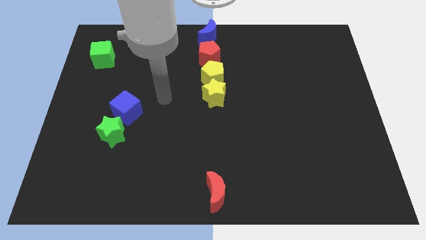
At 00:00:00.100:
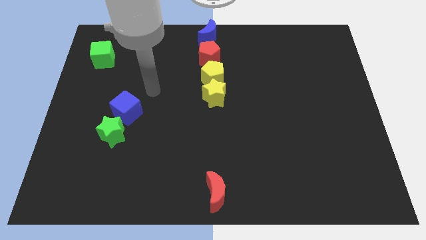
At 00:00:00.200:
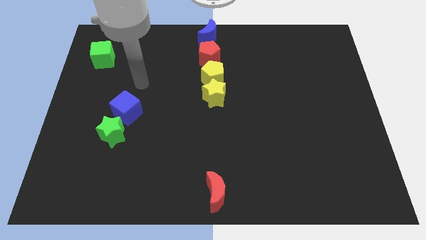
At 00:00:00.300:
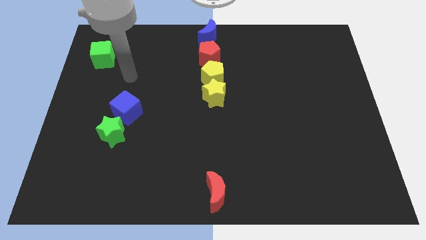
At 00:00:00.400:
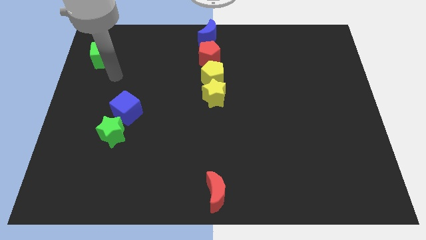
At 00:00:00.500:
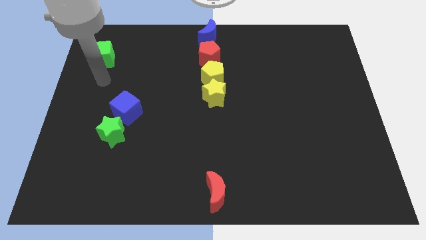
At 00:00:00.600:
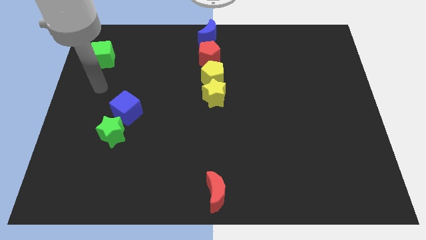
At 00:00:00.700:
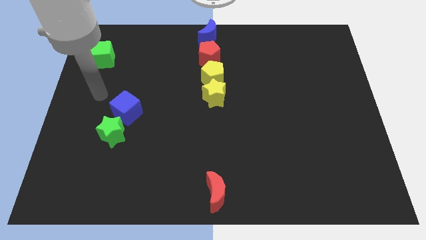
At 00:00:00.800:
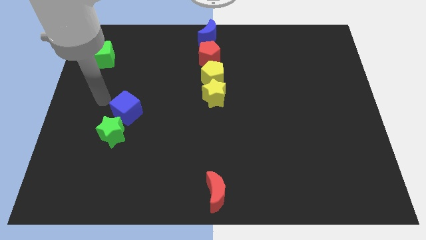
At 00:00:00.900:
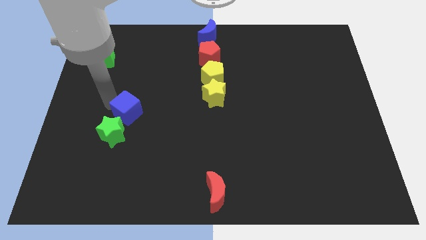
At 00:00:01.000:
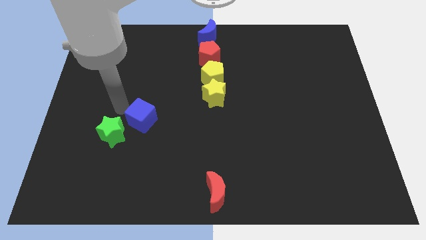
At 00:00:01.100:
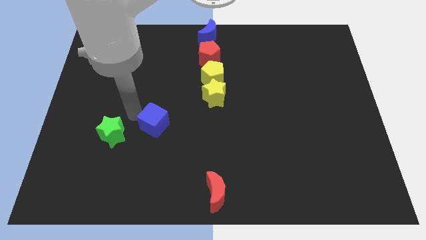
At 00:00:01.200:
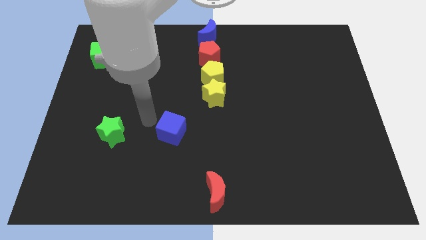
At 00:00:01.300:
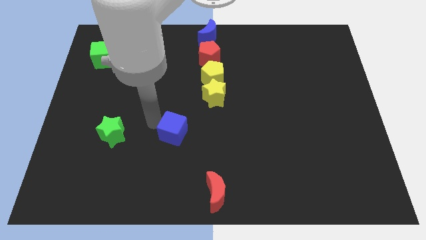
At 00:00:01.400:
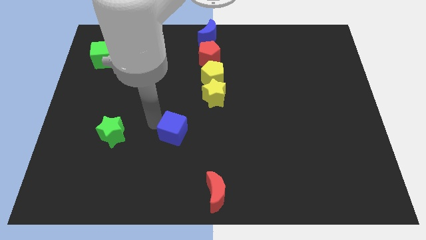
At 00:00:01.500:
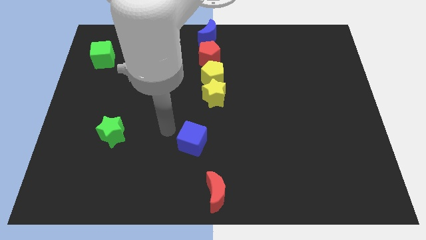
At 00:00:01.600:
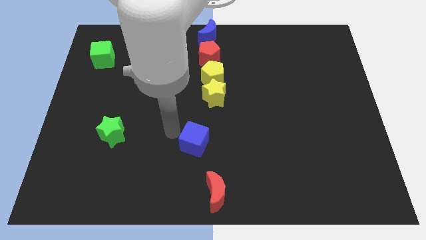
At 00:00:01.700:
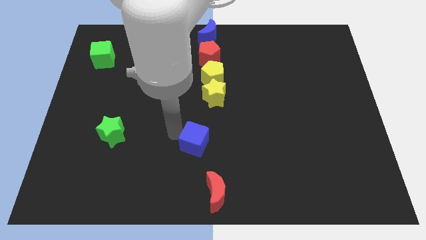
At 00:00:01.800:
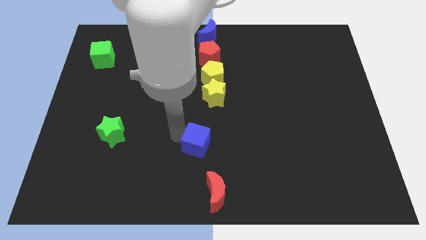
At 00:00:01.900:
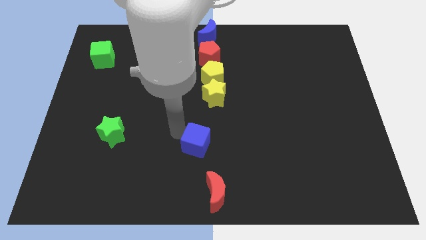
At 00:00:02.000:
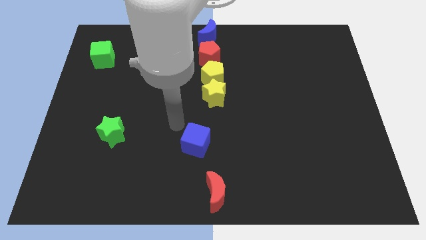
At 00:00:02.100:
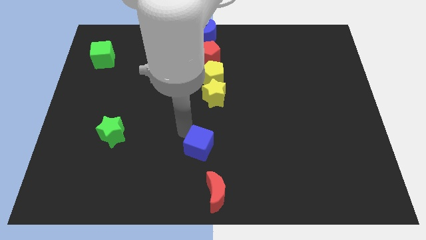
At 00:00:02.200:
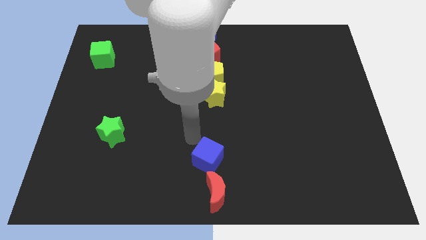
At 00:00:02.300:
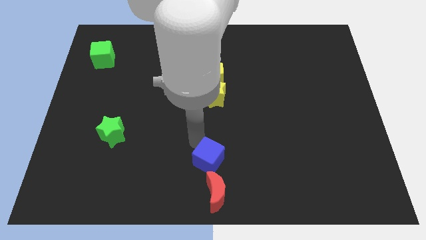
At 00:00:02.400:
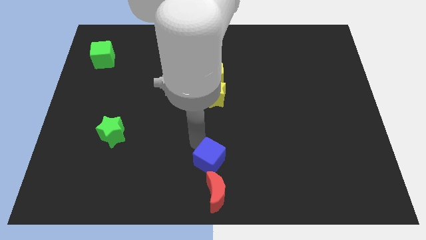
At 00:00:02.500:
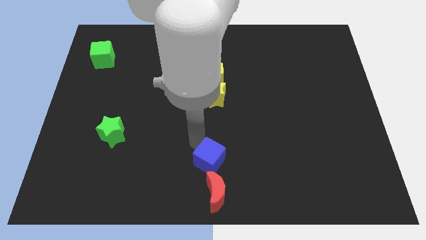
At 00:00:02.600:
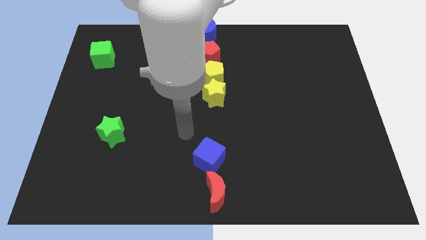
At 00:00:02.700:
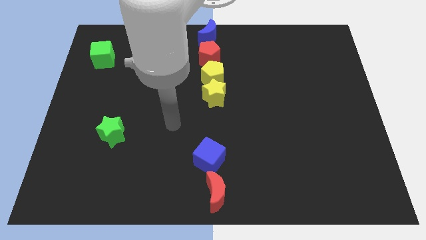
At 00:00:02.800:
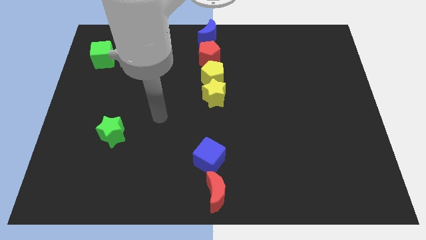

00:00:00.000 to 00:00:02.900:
put the blue cube at the top of the red crescent

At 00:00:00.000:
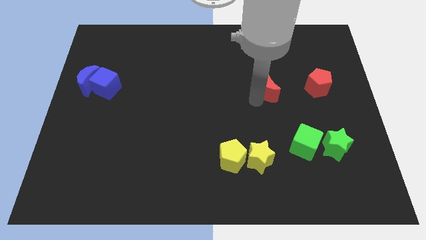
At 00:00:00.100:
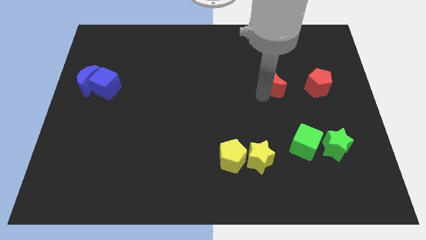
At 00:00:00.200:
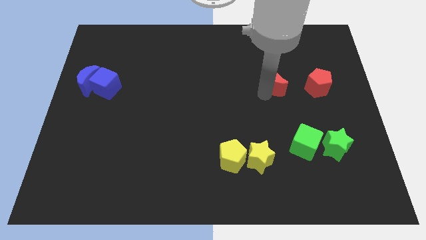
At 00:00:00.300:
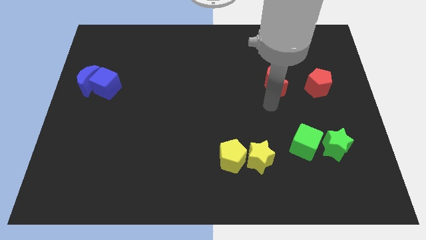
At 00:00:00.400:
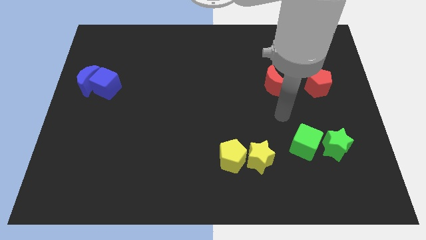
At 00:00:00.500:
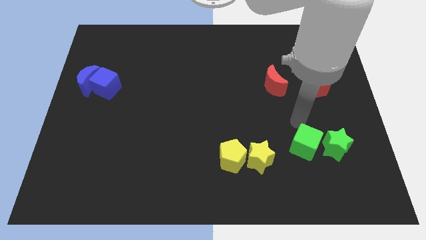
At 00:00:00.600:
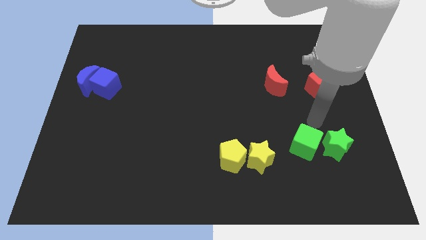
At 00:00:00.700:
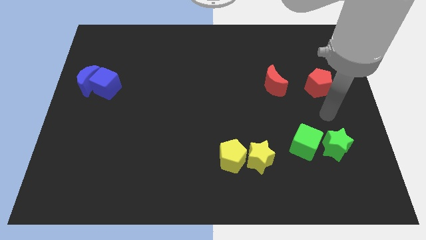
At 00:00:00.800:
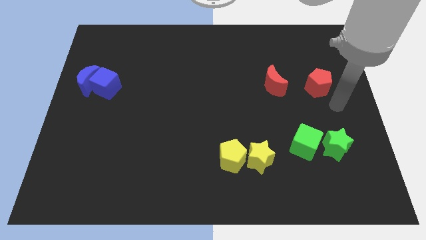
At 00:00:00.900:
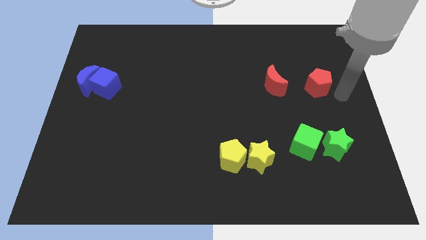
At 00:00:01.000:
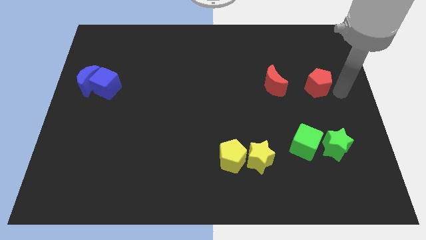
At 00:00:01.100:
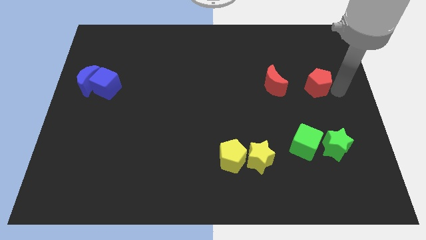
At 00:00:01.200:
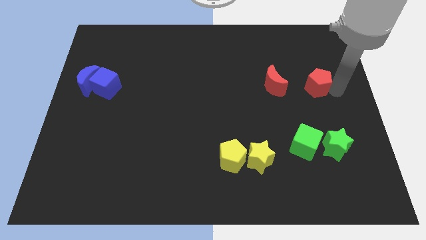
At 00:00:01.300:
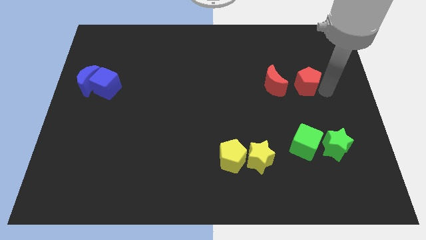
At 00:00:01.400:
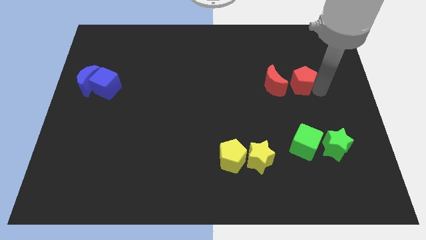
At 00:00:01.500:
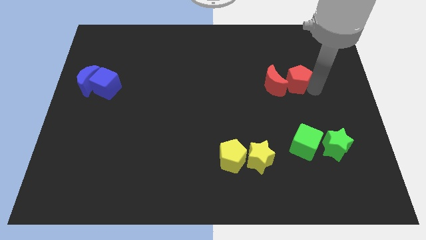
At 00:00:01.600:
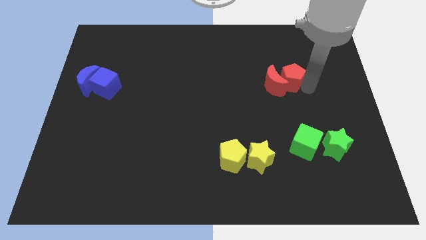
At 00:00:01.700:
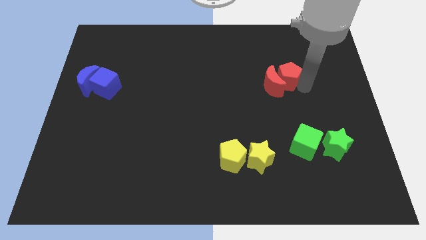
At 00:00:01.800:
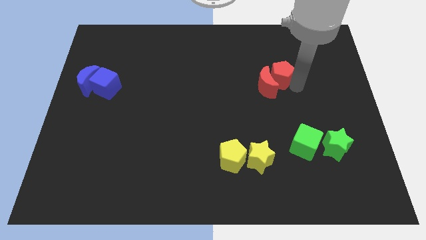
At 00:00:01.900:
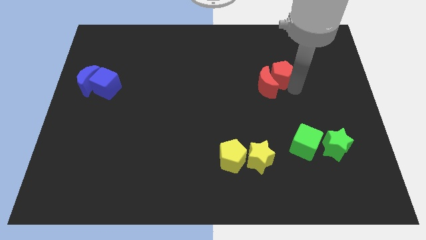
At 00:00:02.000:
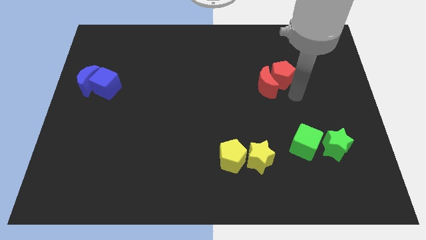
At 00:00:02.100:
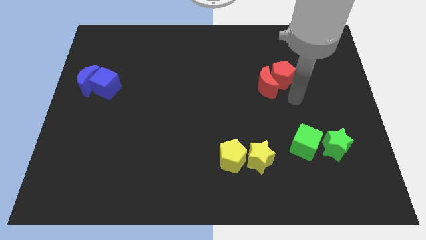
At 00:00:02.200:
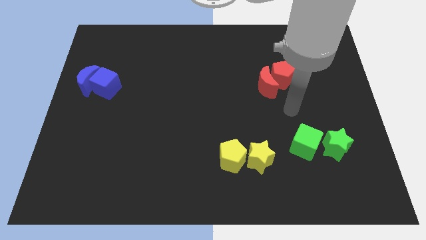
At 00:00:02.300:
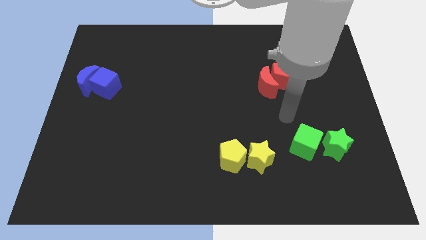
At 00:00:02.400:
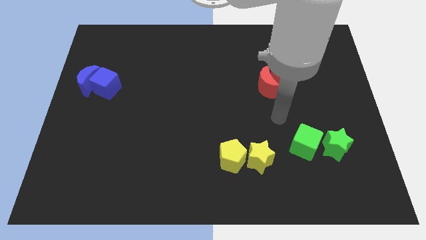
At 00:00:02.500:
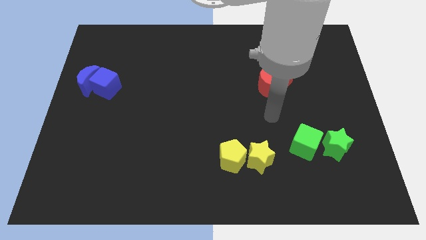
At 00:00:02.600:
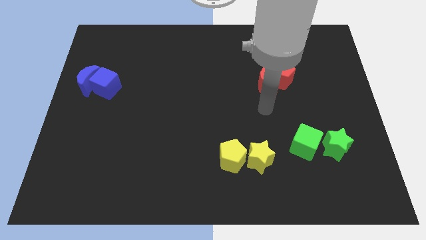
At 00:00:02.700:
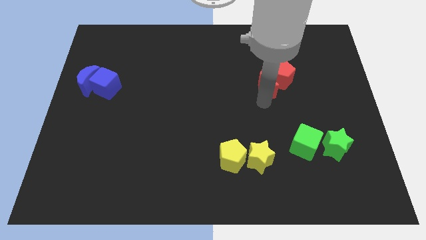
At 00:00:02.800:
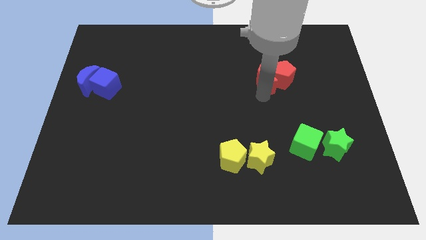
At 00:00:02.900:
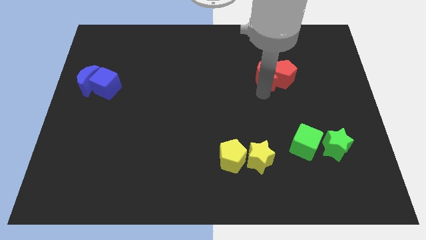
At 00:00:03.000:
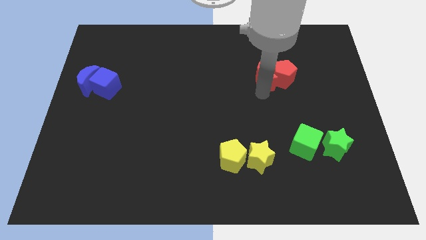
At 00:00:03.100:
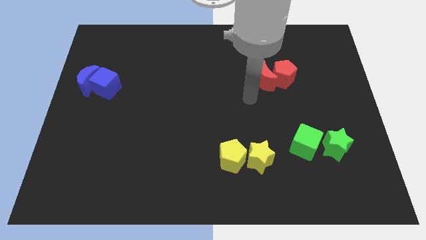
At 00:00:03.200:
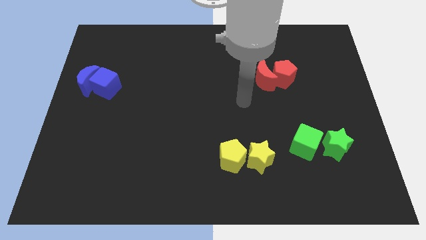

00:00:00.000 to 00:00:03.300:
push the red pentagon into the red moon

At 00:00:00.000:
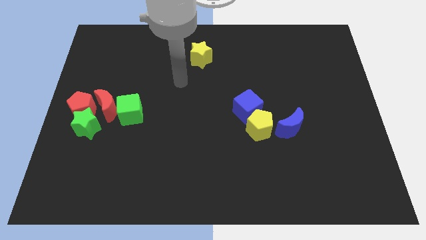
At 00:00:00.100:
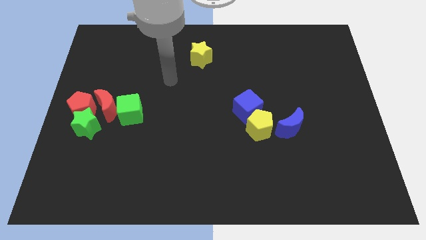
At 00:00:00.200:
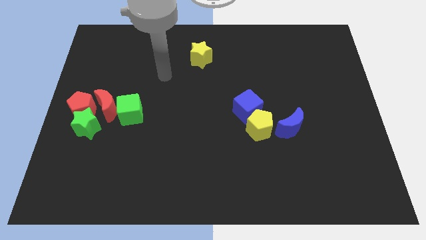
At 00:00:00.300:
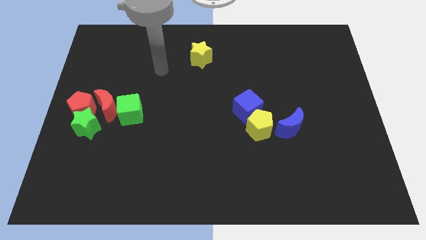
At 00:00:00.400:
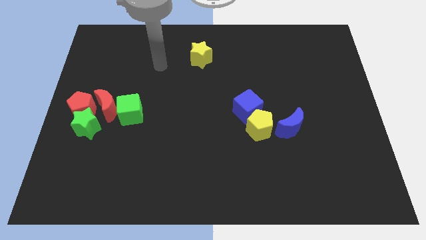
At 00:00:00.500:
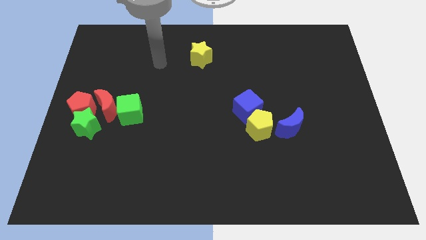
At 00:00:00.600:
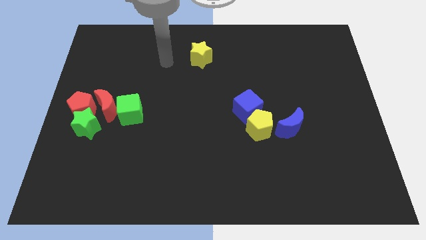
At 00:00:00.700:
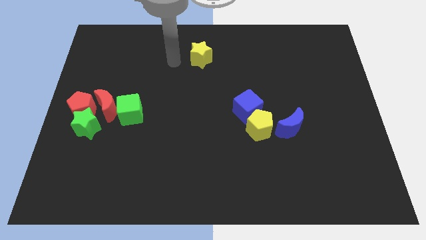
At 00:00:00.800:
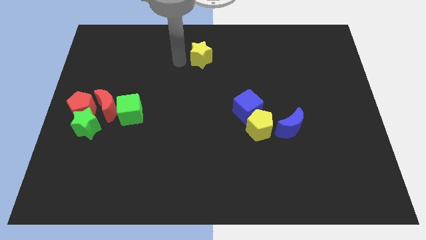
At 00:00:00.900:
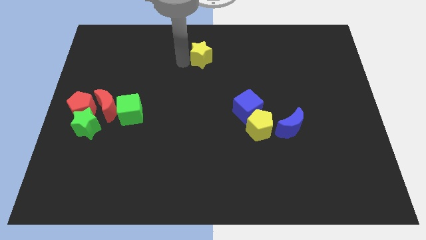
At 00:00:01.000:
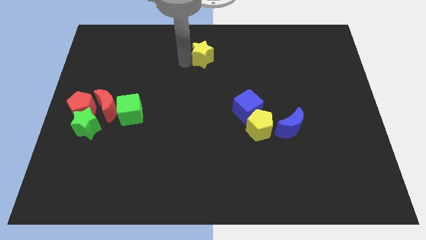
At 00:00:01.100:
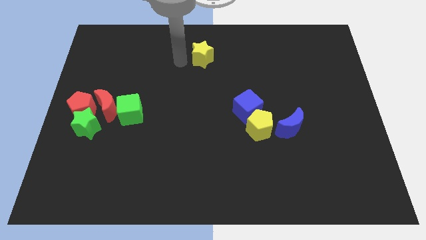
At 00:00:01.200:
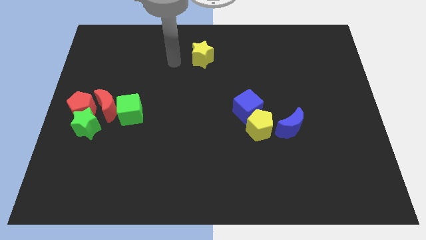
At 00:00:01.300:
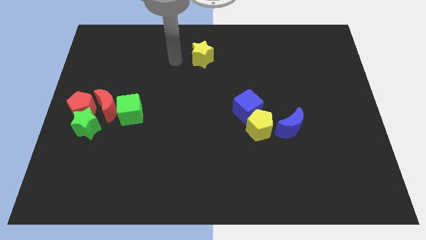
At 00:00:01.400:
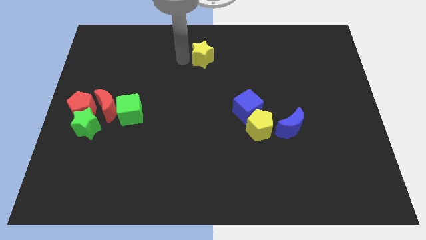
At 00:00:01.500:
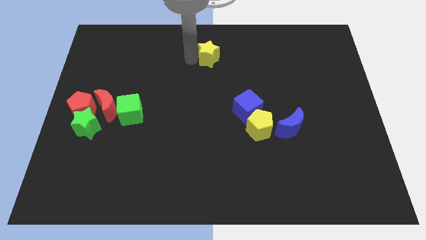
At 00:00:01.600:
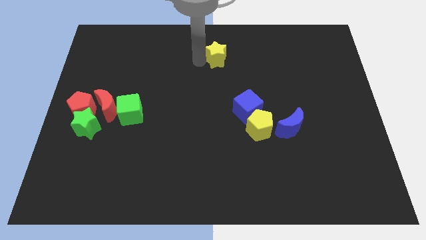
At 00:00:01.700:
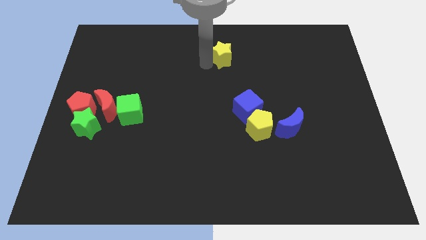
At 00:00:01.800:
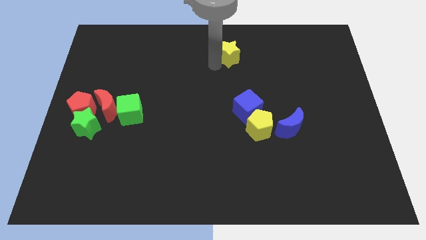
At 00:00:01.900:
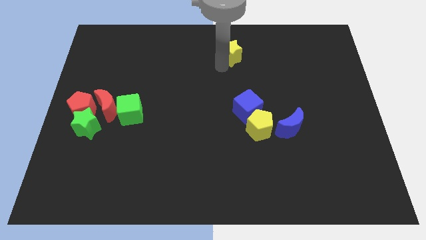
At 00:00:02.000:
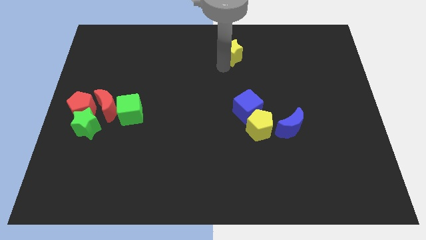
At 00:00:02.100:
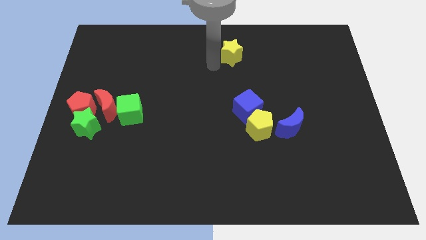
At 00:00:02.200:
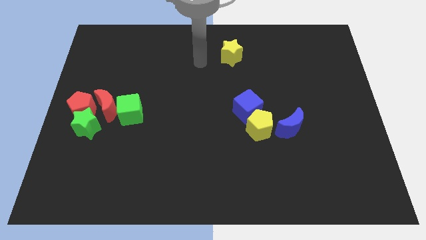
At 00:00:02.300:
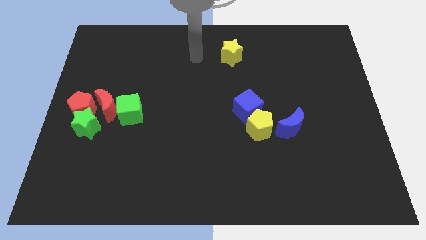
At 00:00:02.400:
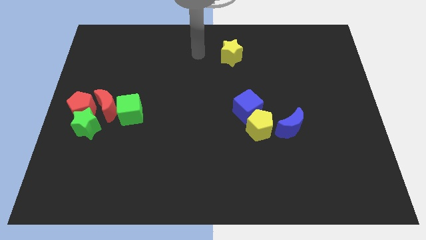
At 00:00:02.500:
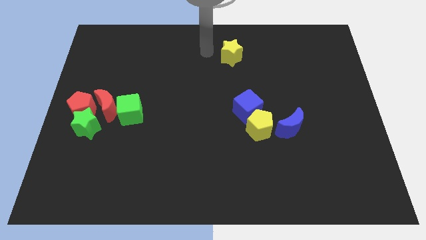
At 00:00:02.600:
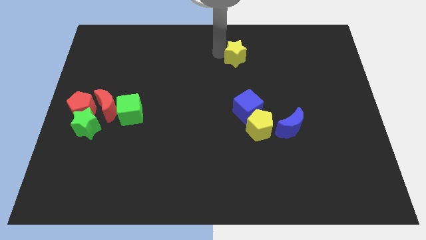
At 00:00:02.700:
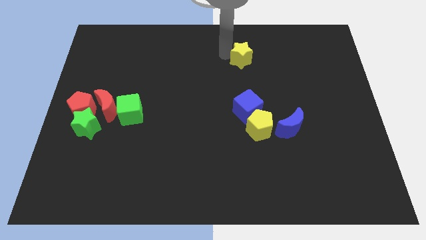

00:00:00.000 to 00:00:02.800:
push yellow star above blue cube
